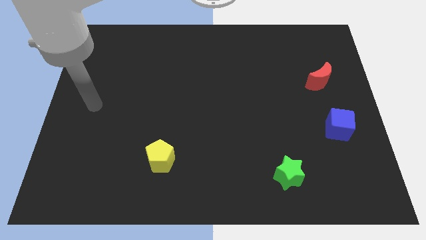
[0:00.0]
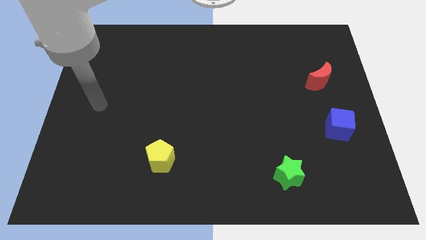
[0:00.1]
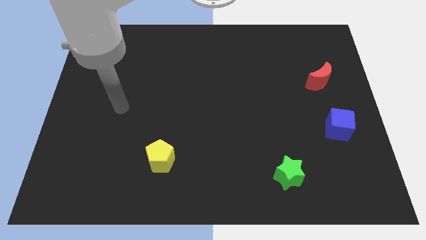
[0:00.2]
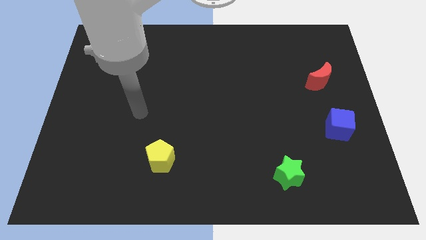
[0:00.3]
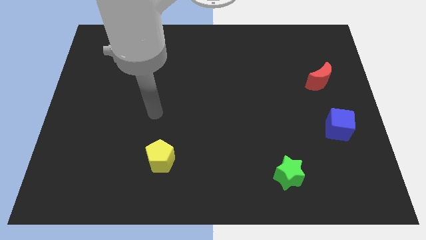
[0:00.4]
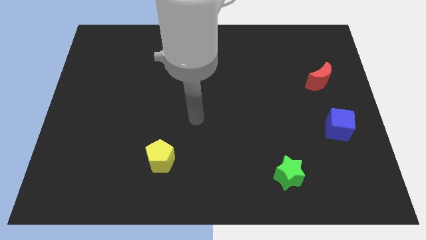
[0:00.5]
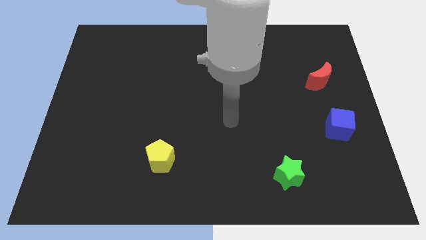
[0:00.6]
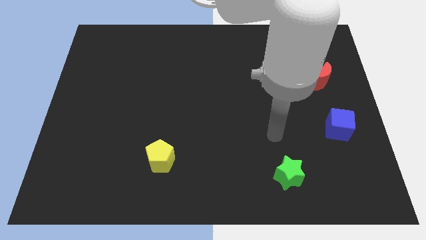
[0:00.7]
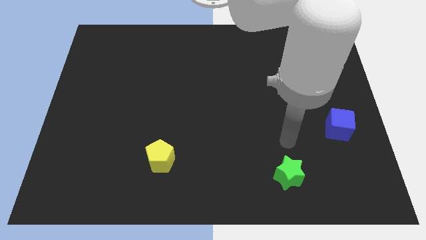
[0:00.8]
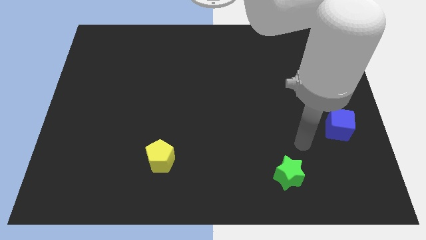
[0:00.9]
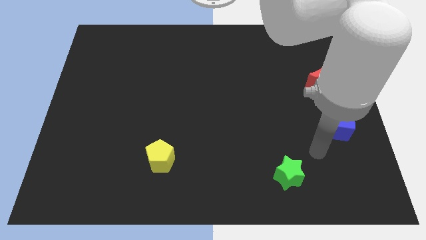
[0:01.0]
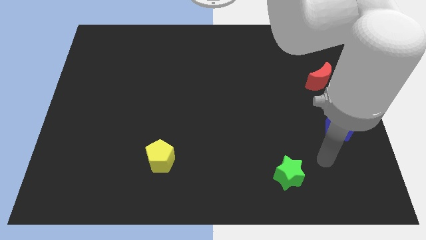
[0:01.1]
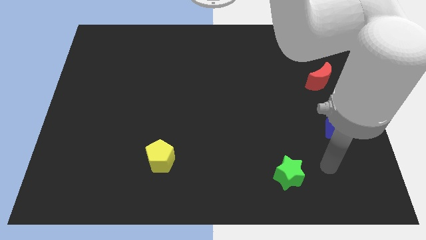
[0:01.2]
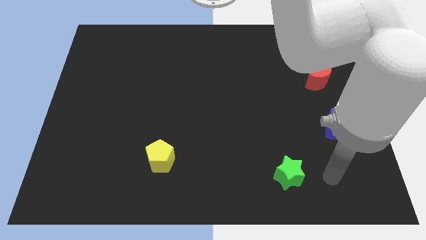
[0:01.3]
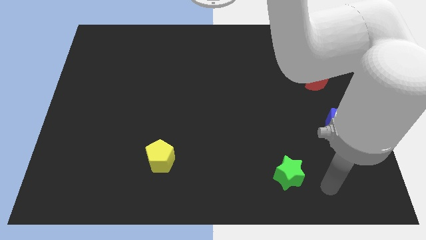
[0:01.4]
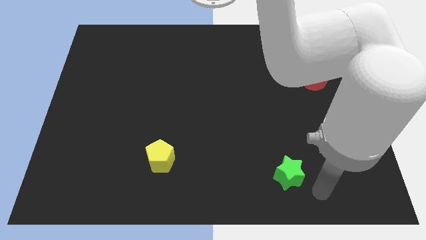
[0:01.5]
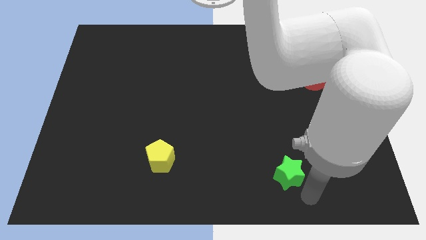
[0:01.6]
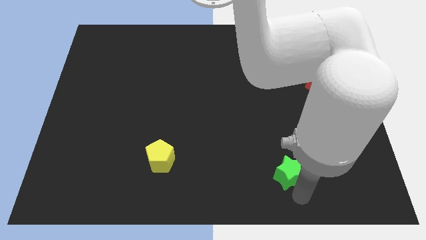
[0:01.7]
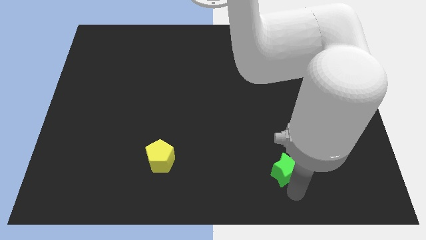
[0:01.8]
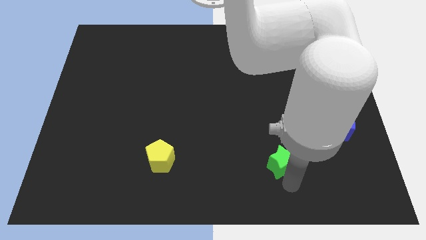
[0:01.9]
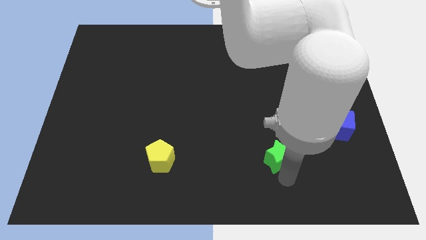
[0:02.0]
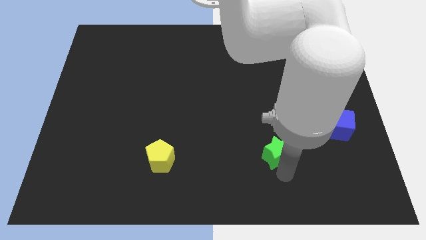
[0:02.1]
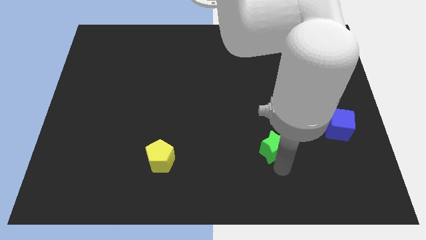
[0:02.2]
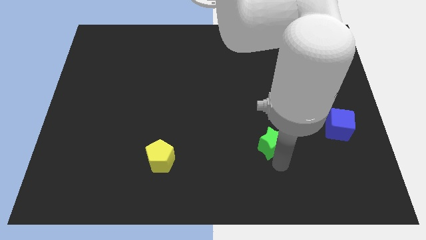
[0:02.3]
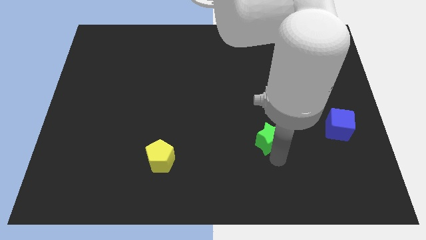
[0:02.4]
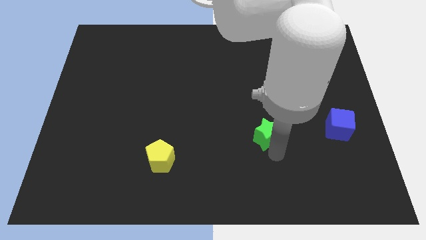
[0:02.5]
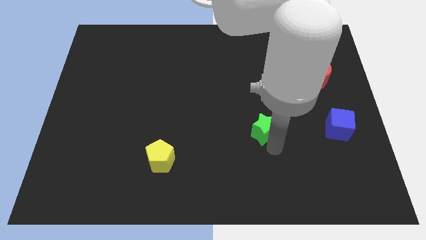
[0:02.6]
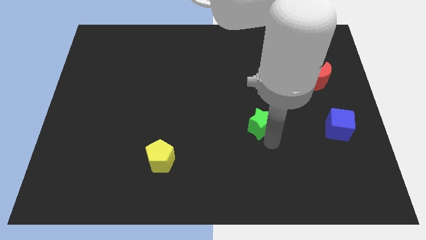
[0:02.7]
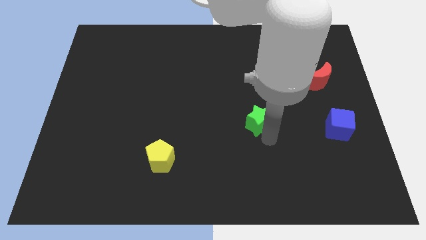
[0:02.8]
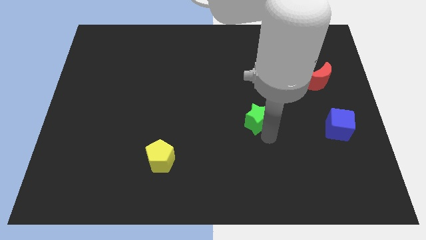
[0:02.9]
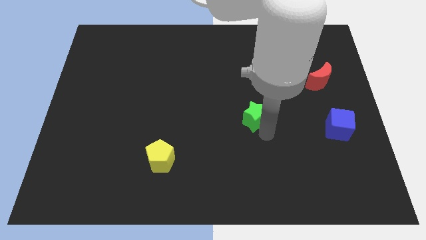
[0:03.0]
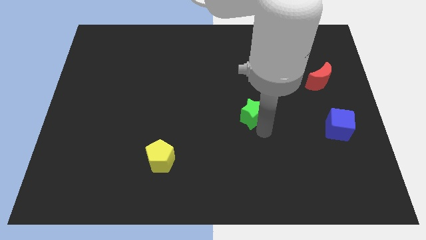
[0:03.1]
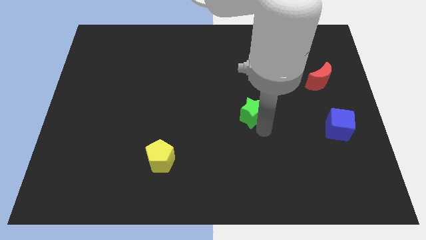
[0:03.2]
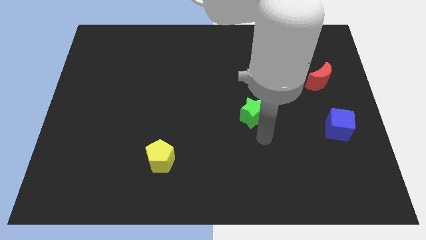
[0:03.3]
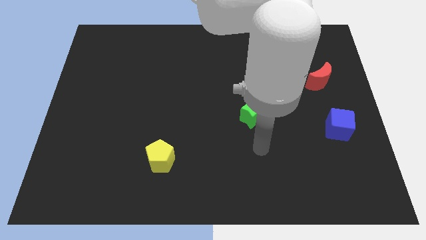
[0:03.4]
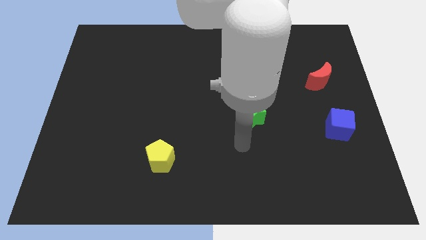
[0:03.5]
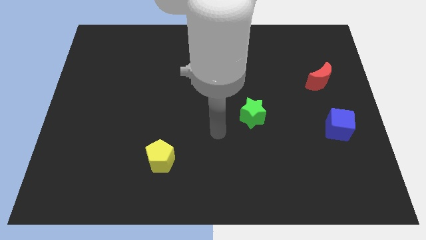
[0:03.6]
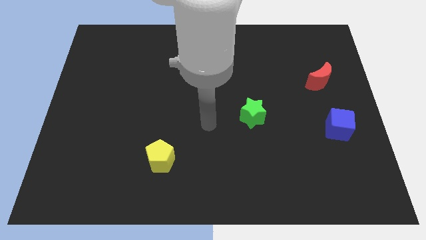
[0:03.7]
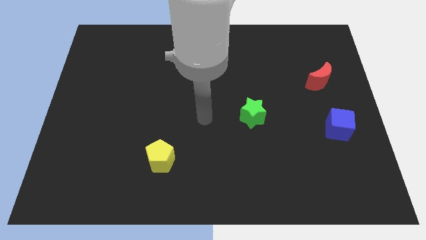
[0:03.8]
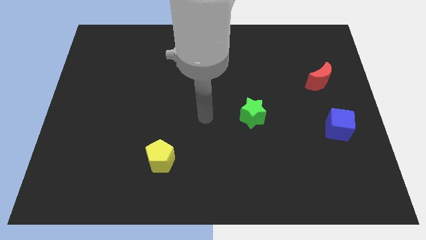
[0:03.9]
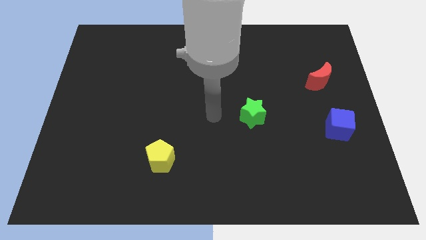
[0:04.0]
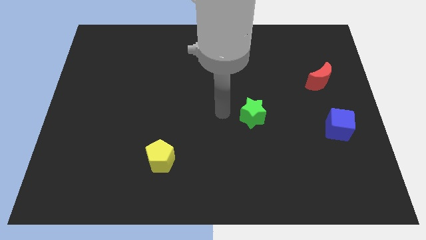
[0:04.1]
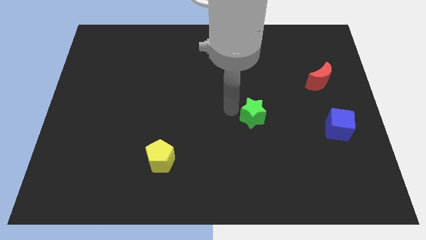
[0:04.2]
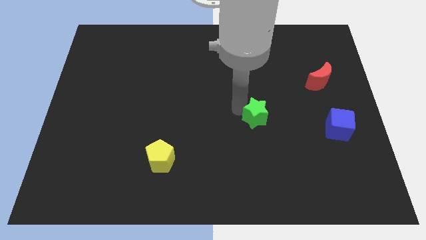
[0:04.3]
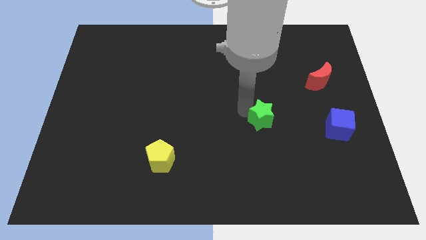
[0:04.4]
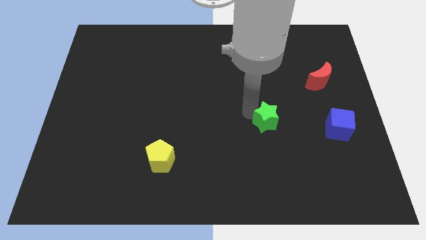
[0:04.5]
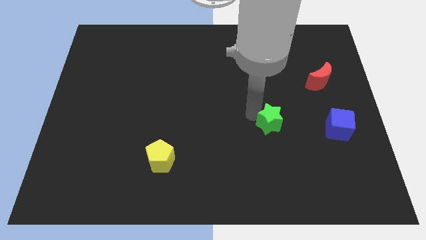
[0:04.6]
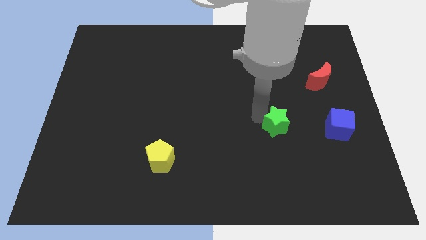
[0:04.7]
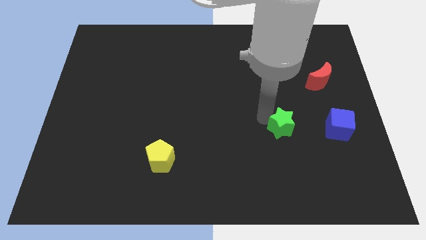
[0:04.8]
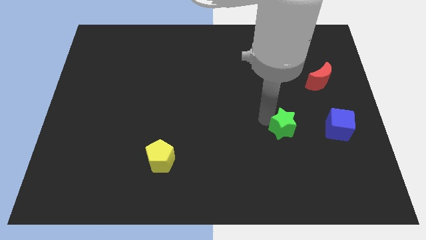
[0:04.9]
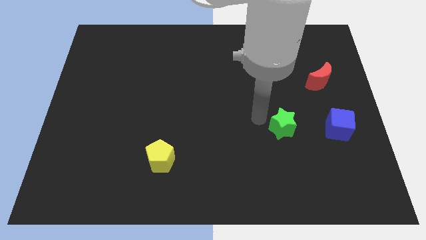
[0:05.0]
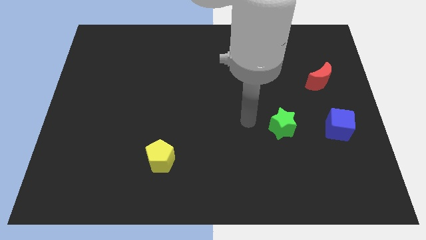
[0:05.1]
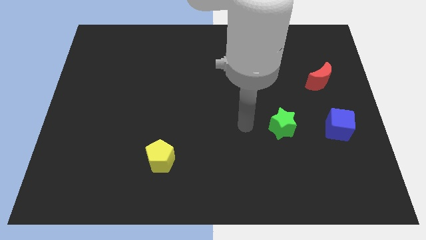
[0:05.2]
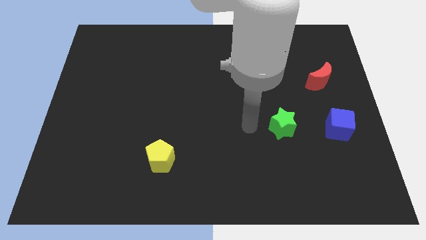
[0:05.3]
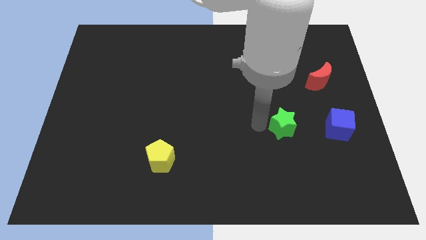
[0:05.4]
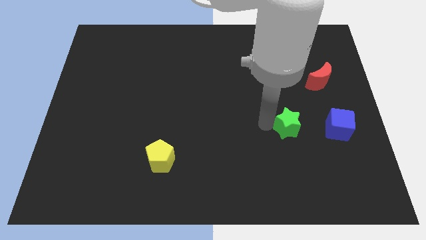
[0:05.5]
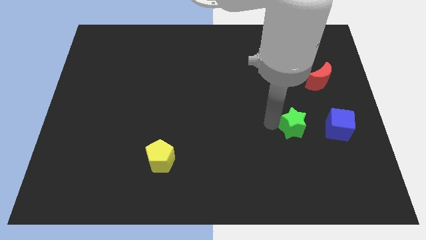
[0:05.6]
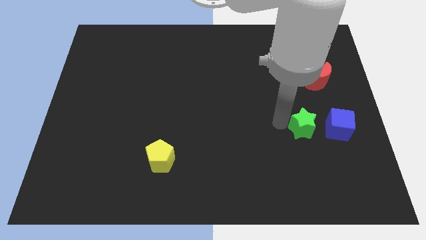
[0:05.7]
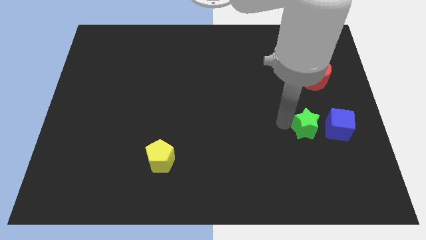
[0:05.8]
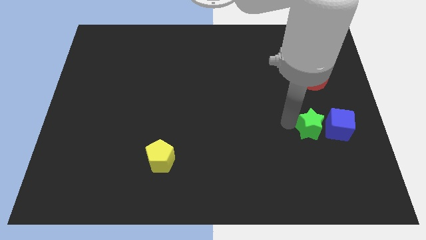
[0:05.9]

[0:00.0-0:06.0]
move the green star towards the blue block

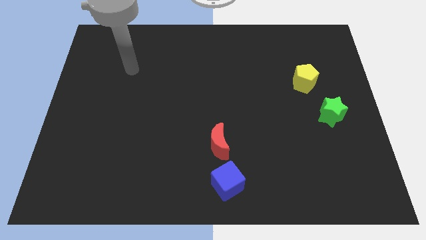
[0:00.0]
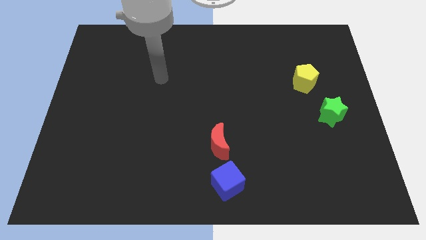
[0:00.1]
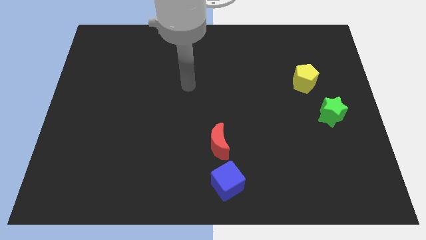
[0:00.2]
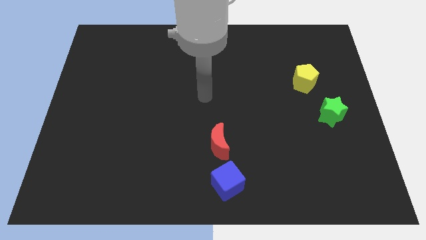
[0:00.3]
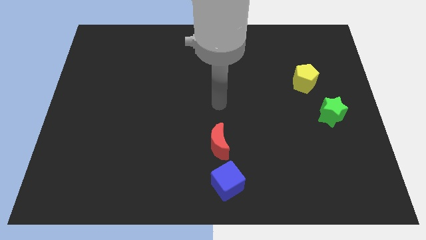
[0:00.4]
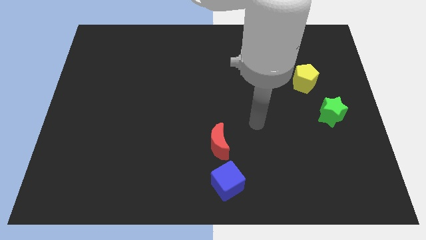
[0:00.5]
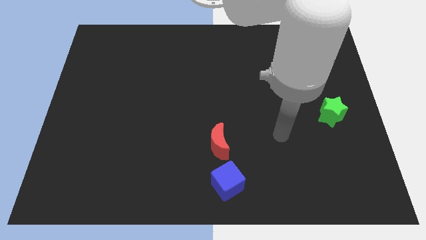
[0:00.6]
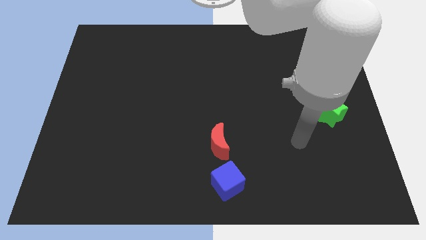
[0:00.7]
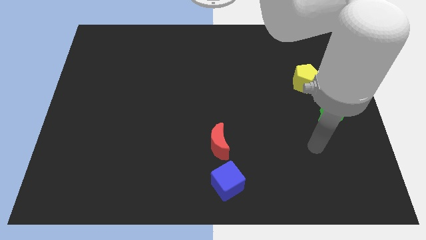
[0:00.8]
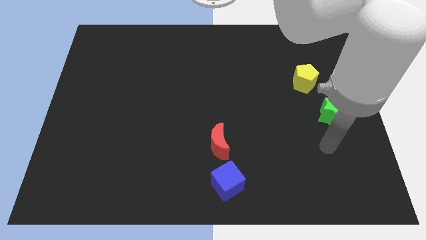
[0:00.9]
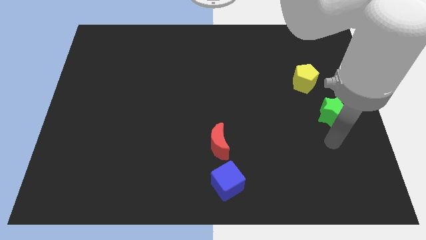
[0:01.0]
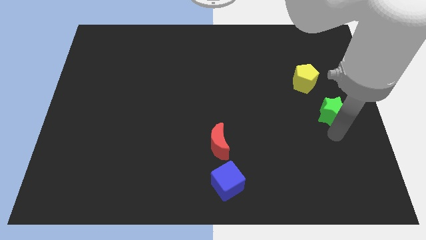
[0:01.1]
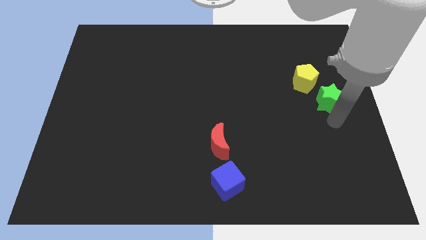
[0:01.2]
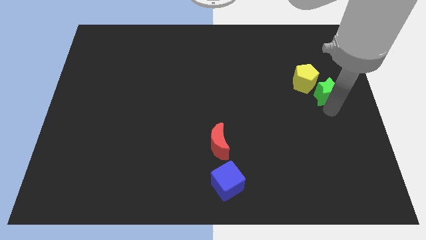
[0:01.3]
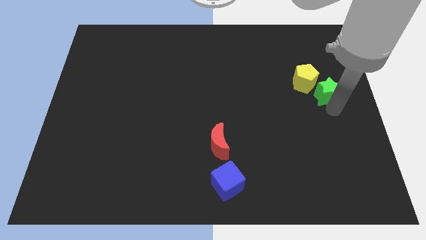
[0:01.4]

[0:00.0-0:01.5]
move the green star to the pentagon

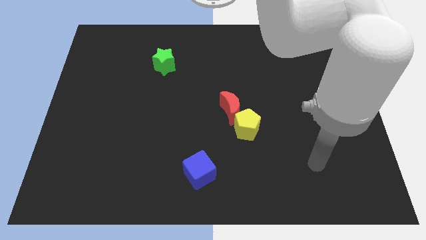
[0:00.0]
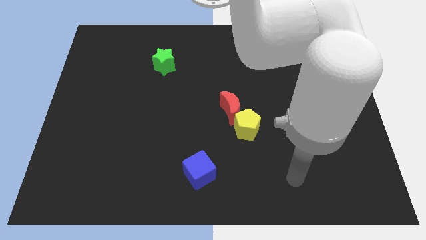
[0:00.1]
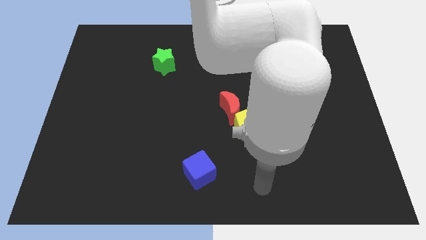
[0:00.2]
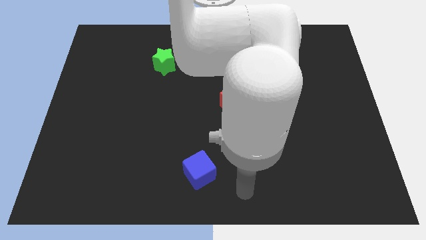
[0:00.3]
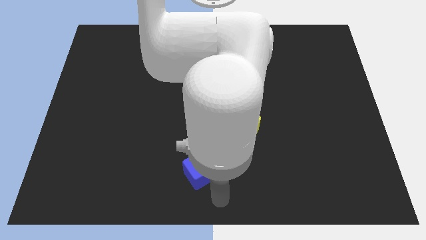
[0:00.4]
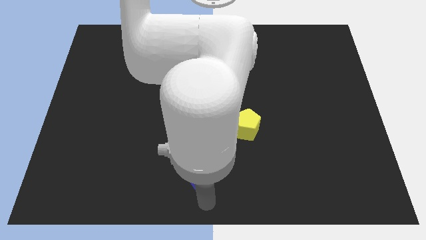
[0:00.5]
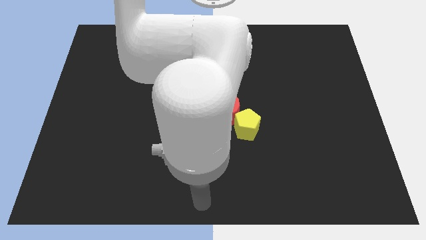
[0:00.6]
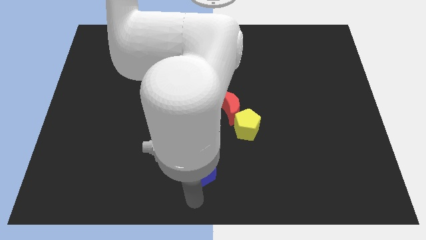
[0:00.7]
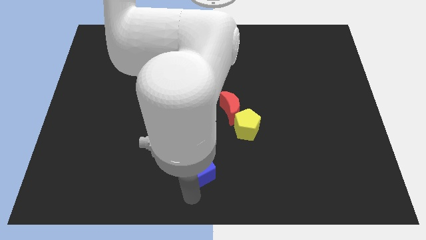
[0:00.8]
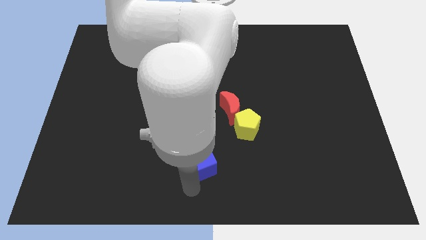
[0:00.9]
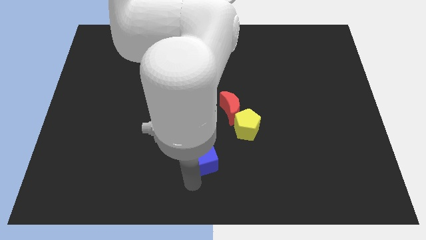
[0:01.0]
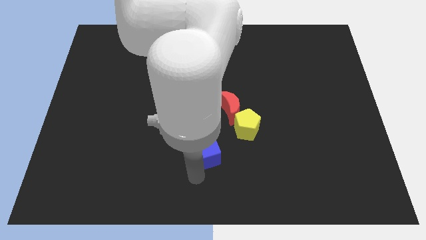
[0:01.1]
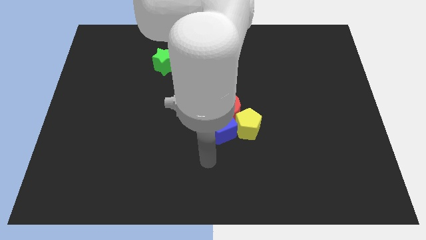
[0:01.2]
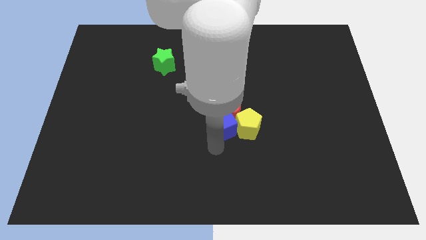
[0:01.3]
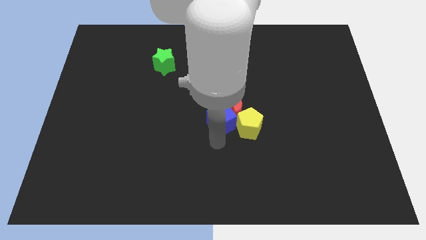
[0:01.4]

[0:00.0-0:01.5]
slide the cube to the red moon
